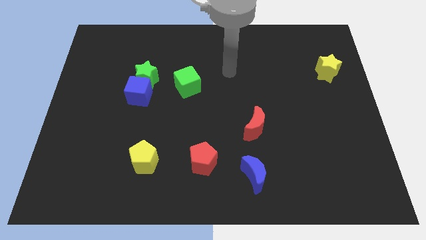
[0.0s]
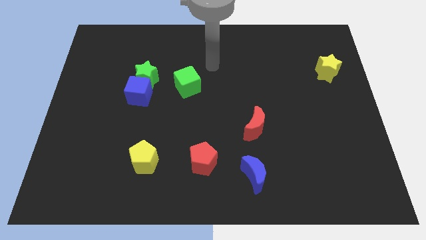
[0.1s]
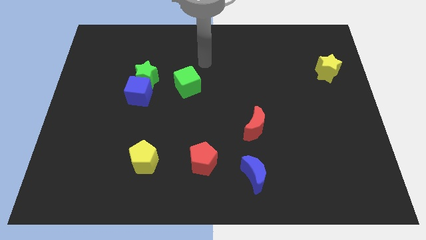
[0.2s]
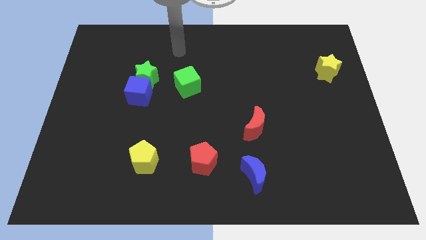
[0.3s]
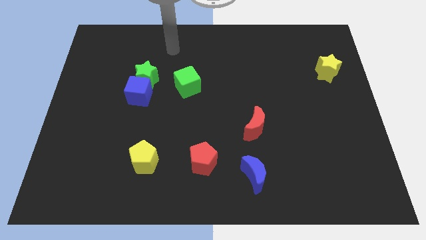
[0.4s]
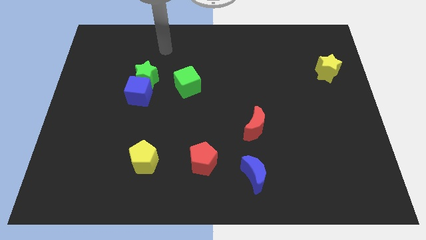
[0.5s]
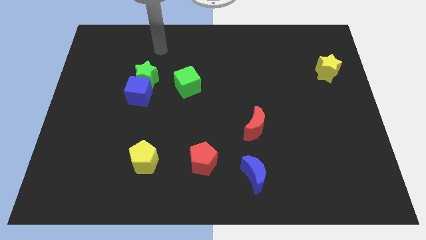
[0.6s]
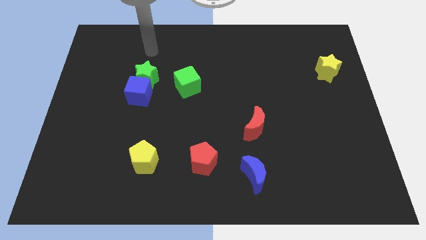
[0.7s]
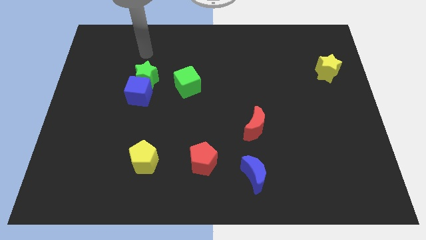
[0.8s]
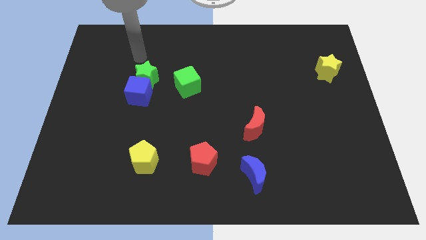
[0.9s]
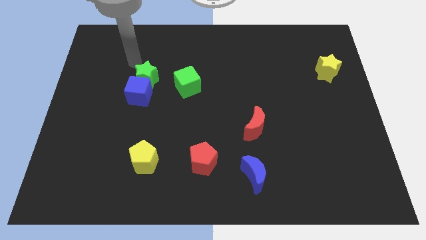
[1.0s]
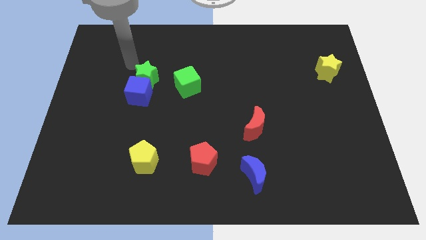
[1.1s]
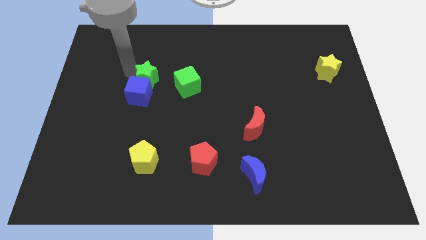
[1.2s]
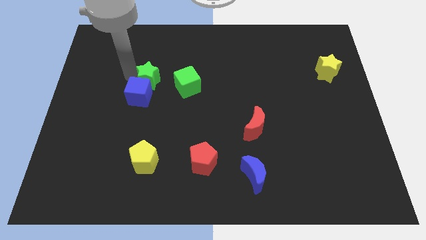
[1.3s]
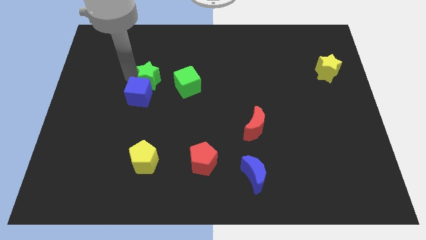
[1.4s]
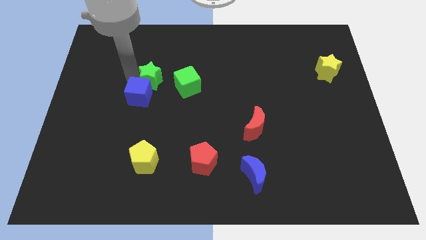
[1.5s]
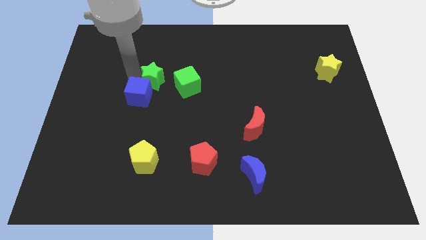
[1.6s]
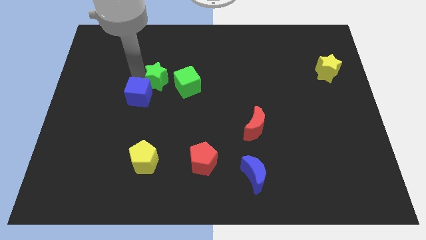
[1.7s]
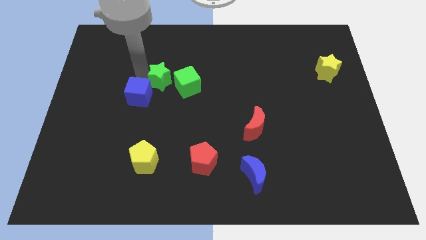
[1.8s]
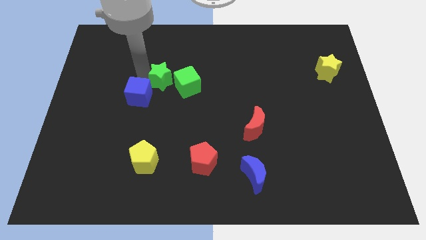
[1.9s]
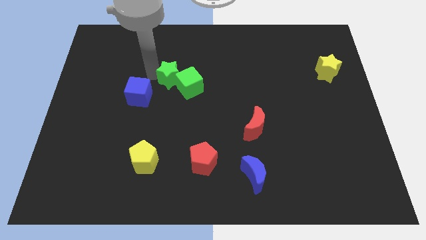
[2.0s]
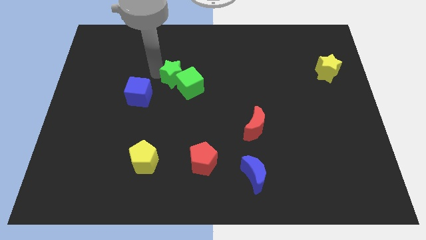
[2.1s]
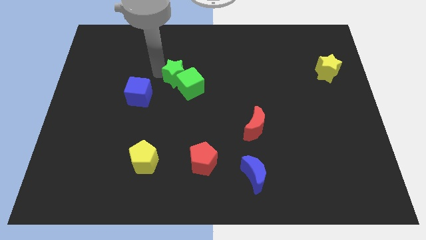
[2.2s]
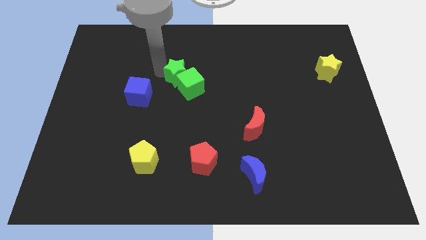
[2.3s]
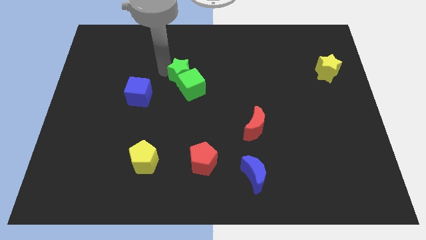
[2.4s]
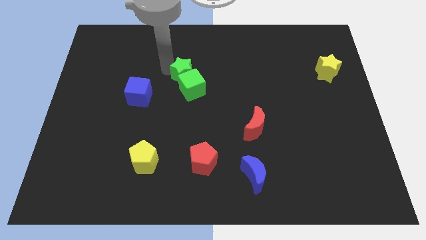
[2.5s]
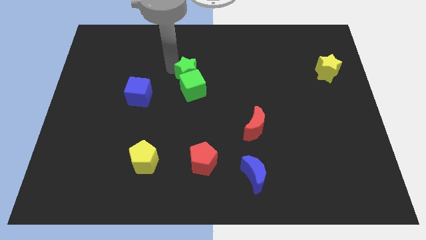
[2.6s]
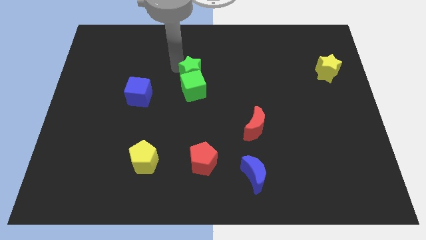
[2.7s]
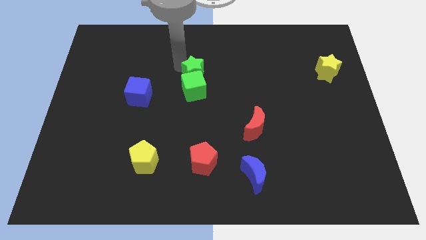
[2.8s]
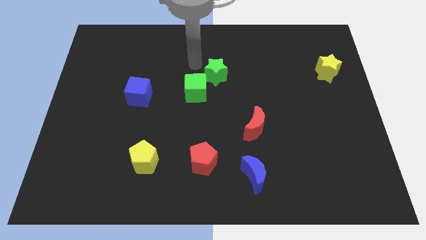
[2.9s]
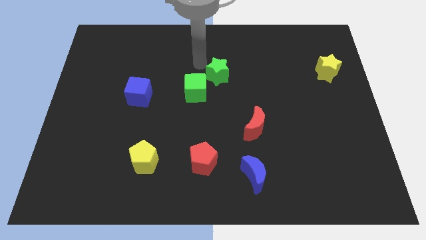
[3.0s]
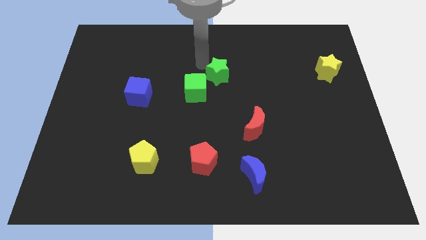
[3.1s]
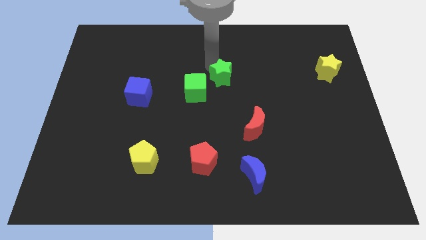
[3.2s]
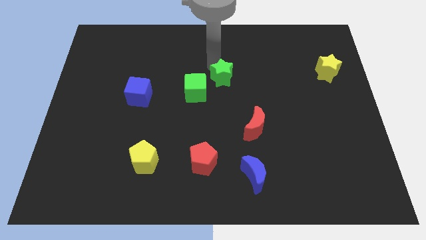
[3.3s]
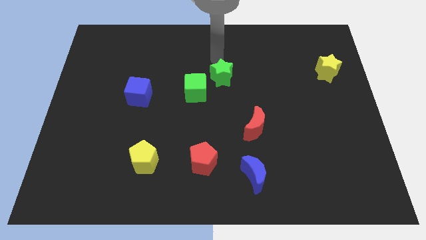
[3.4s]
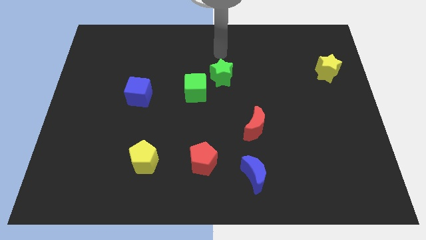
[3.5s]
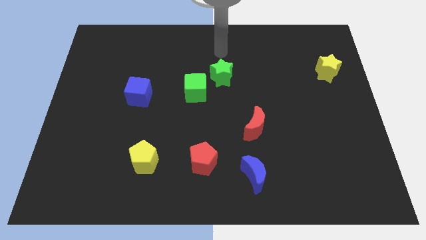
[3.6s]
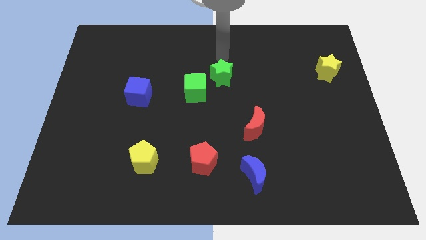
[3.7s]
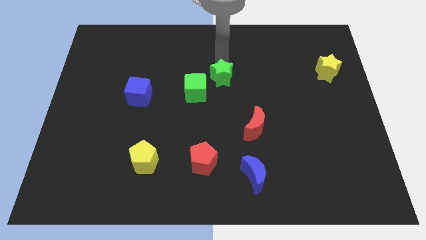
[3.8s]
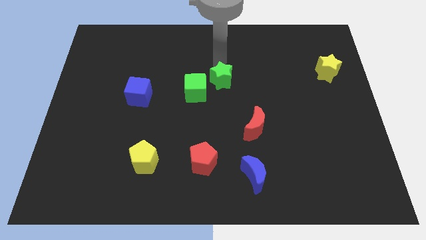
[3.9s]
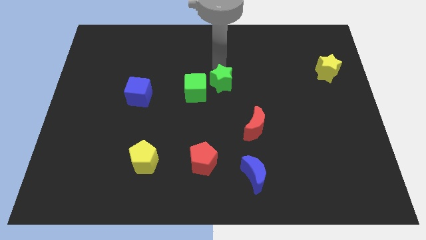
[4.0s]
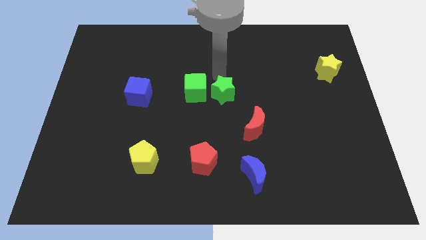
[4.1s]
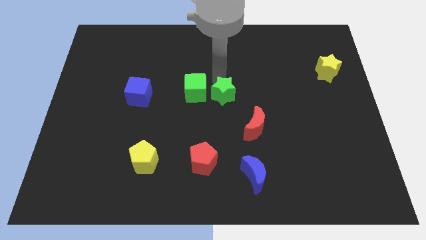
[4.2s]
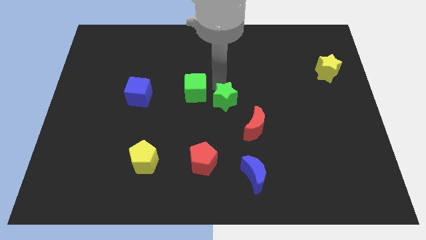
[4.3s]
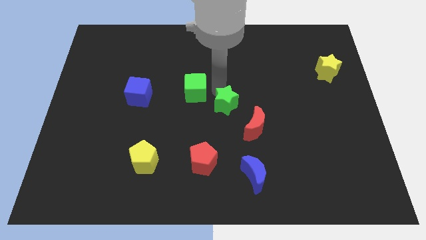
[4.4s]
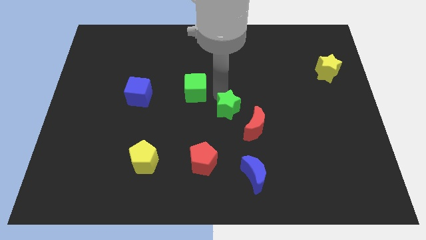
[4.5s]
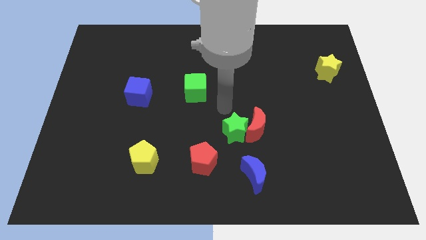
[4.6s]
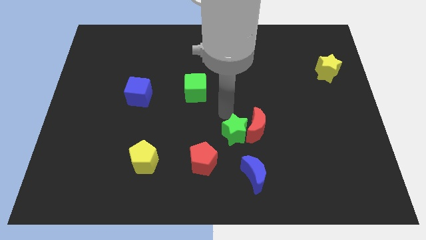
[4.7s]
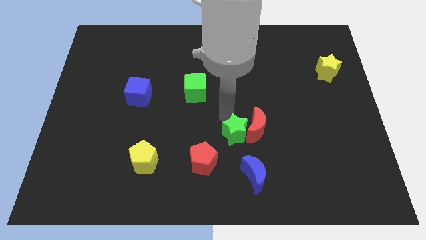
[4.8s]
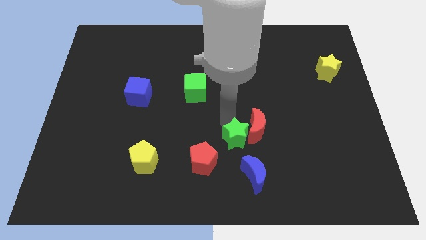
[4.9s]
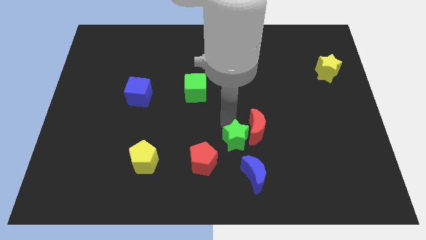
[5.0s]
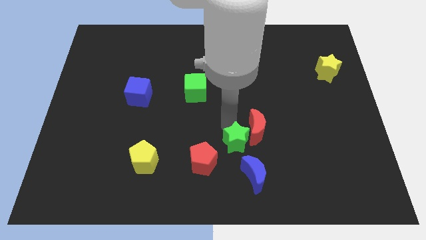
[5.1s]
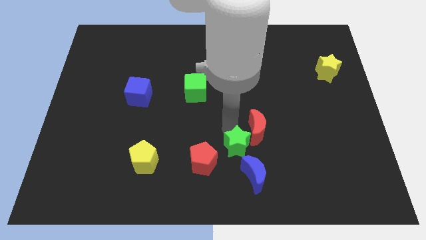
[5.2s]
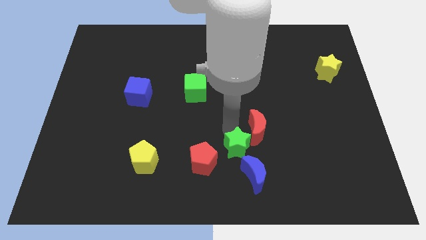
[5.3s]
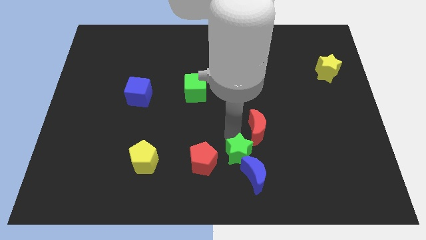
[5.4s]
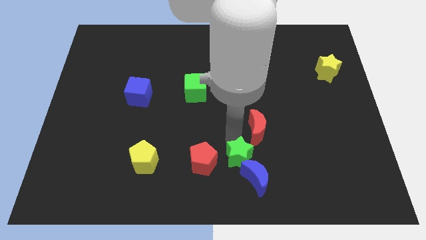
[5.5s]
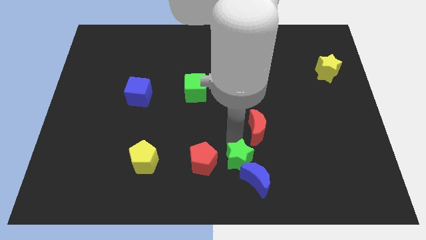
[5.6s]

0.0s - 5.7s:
put the green star to the blue moon

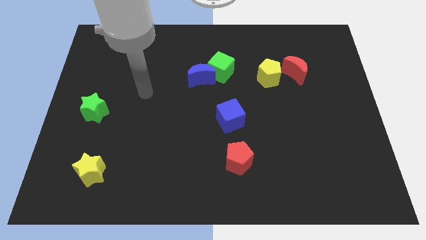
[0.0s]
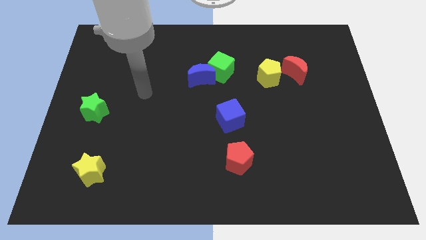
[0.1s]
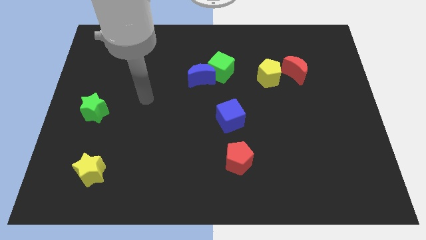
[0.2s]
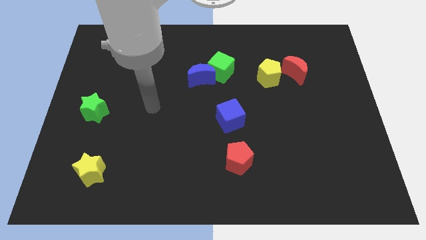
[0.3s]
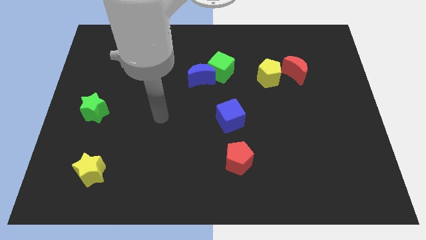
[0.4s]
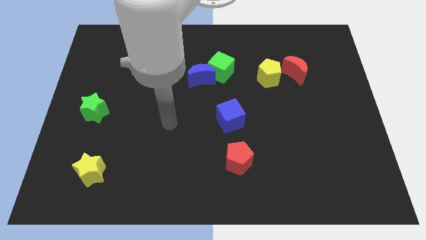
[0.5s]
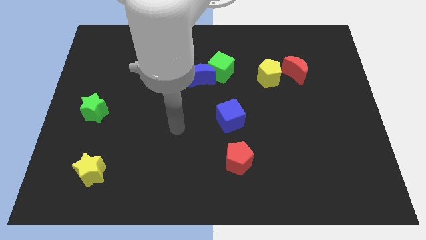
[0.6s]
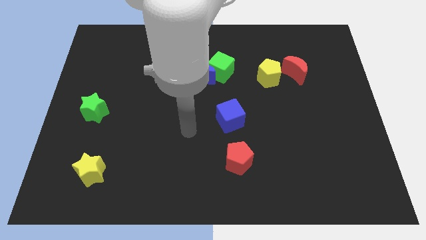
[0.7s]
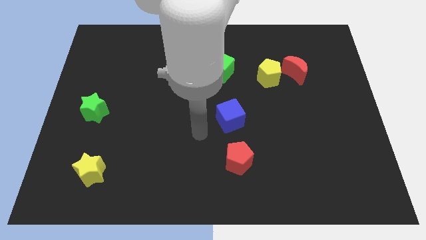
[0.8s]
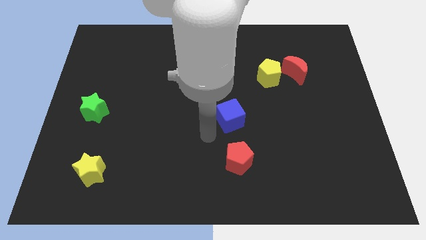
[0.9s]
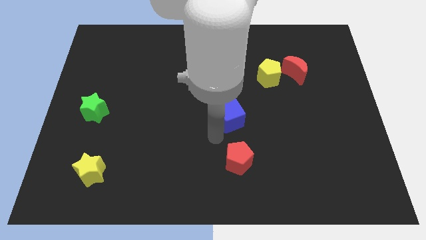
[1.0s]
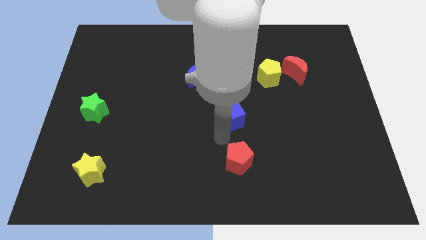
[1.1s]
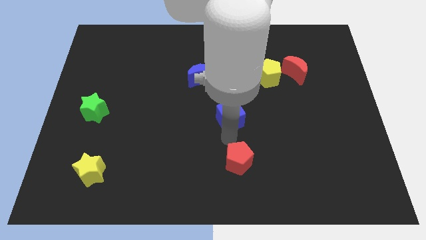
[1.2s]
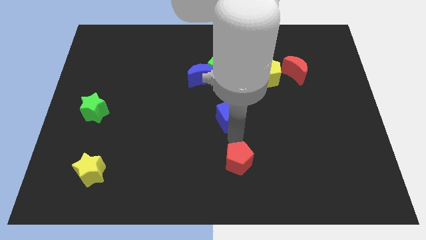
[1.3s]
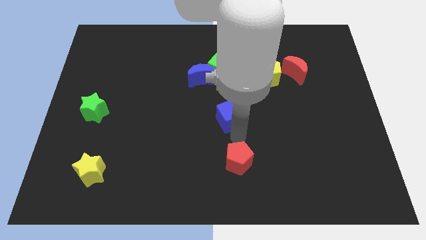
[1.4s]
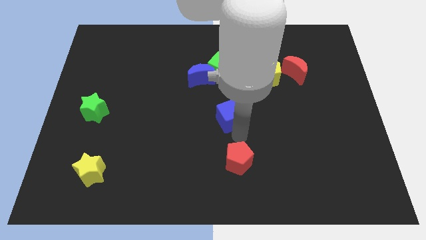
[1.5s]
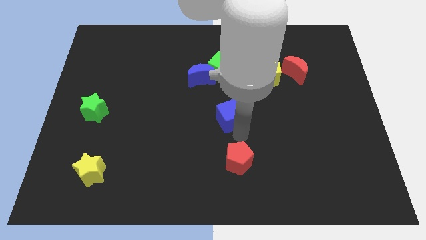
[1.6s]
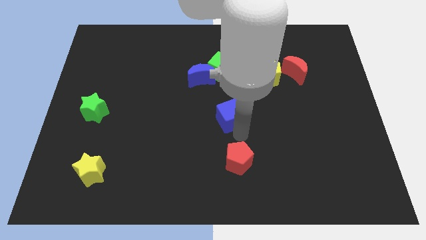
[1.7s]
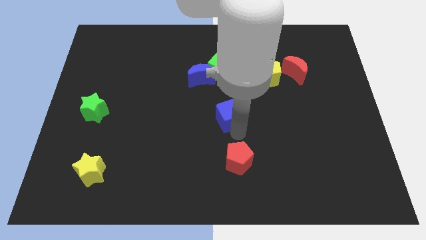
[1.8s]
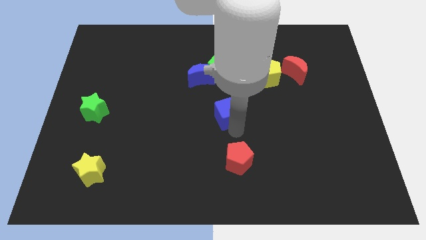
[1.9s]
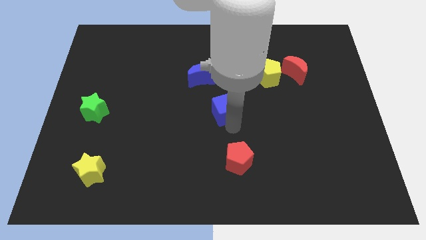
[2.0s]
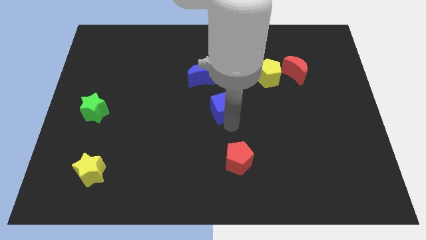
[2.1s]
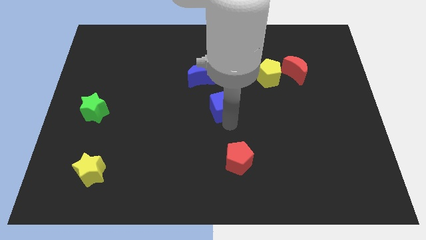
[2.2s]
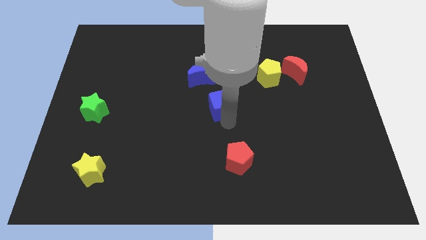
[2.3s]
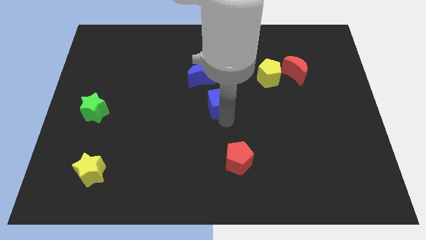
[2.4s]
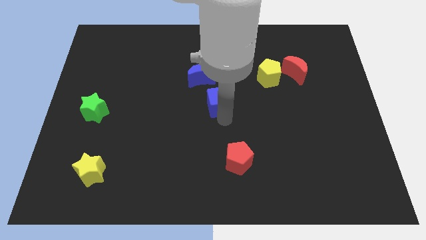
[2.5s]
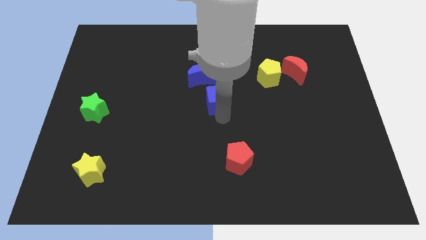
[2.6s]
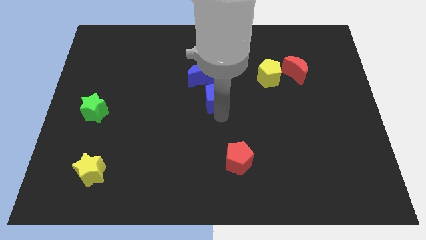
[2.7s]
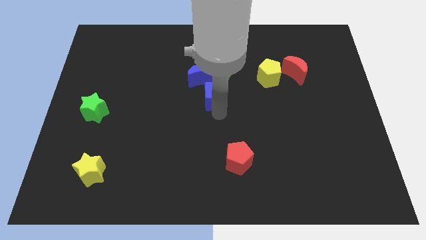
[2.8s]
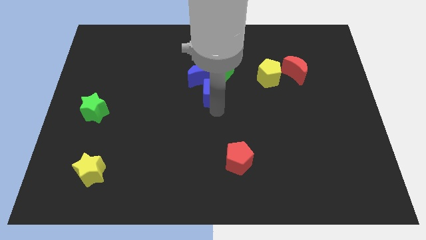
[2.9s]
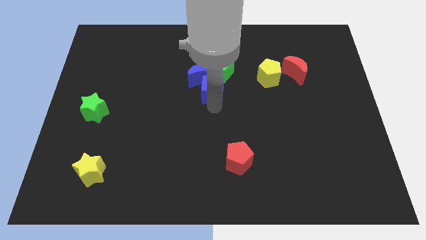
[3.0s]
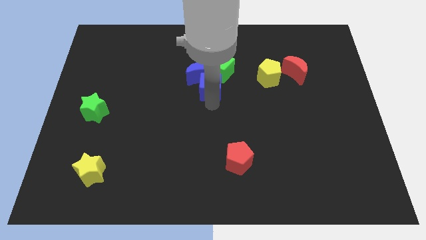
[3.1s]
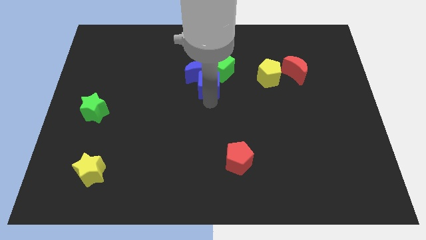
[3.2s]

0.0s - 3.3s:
slide the blue cube towards the blue moon
